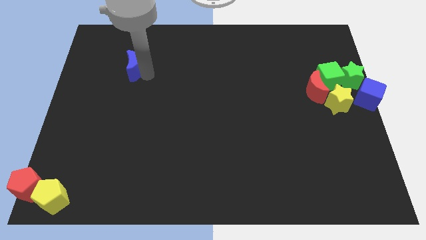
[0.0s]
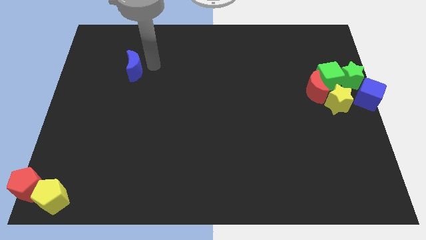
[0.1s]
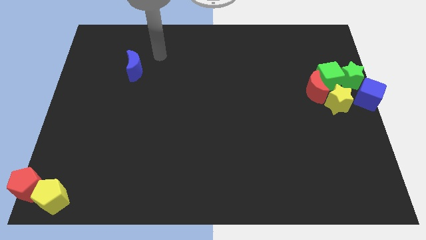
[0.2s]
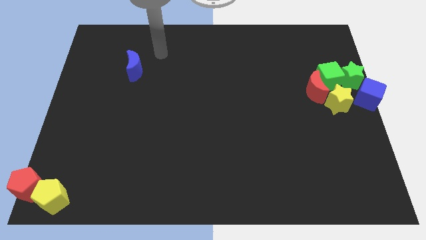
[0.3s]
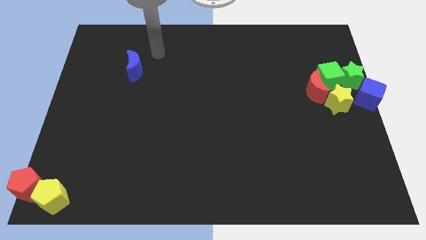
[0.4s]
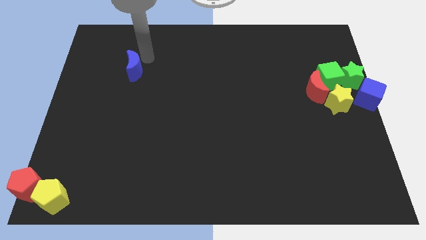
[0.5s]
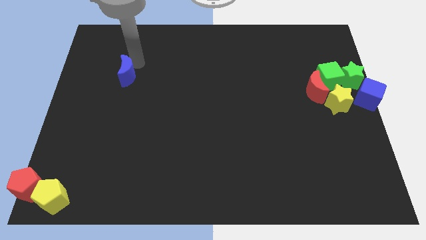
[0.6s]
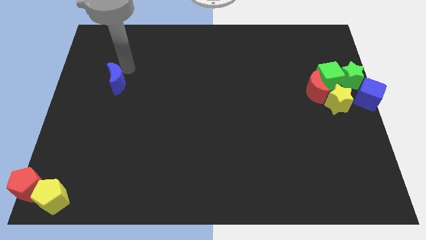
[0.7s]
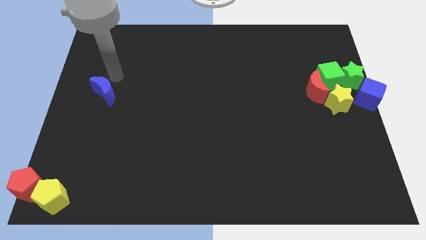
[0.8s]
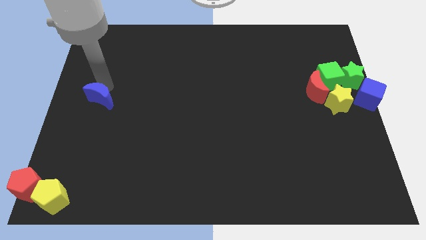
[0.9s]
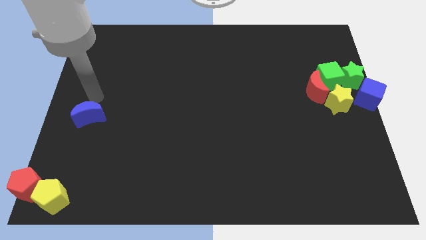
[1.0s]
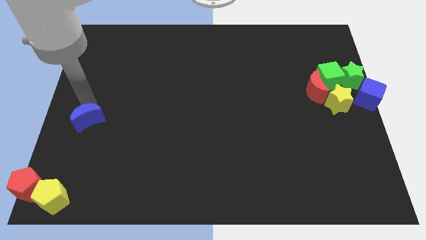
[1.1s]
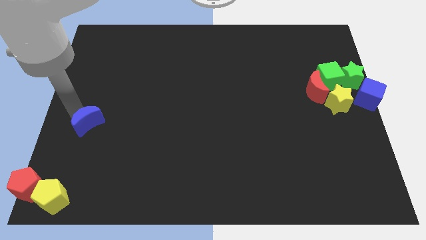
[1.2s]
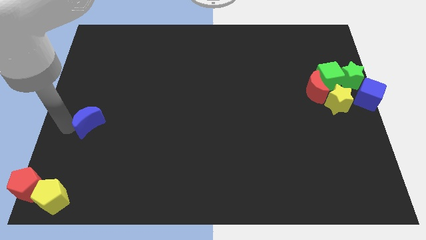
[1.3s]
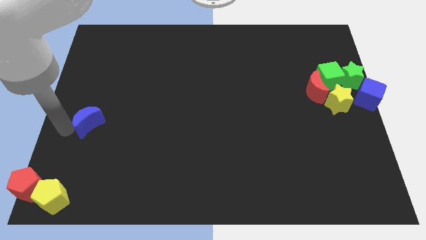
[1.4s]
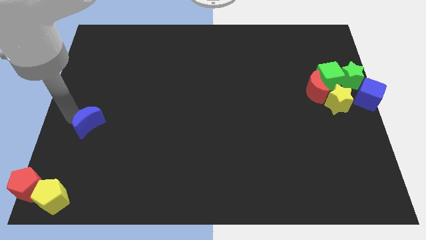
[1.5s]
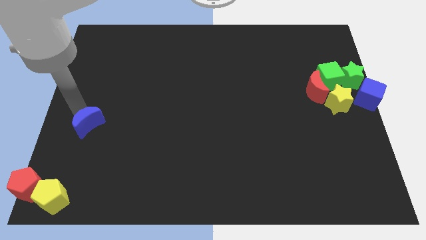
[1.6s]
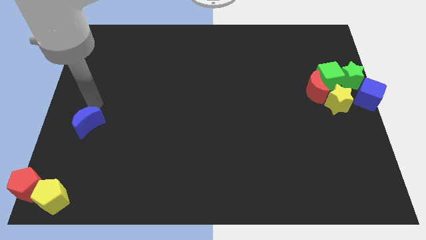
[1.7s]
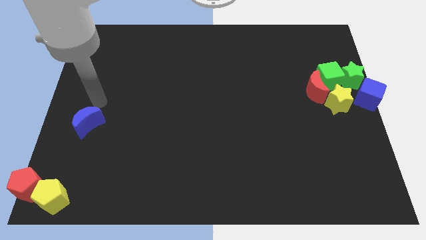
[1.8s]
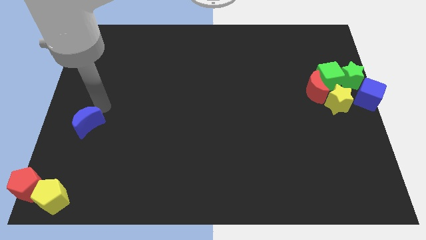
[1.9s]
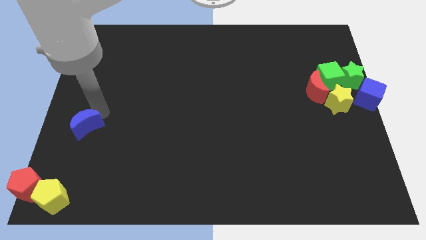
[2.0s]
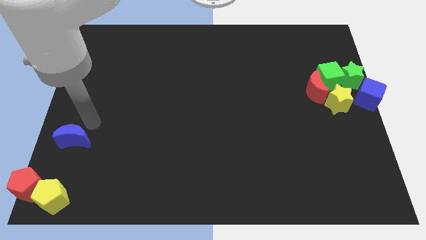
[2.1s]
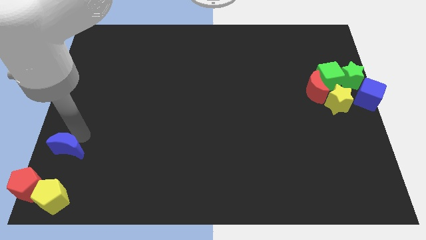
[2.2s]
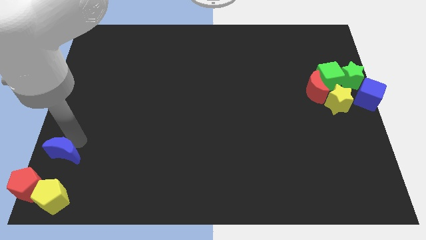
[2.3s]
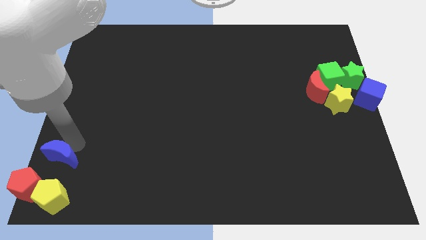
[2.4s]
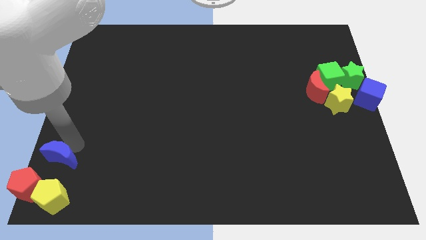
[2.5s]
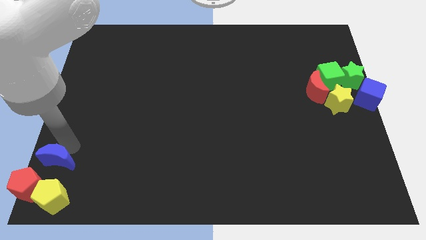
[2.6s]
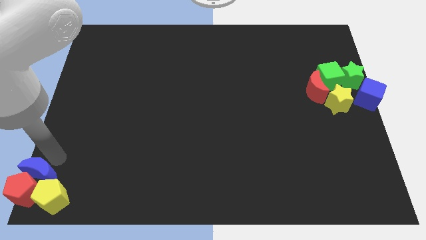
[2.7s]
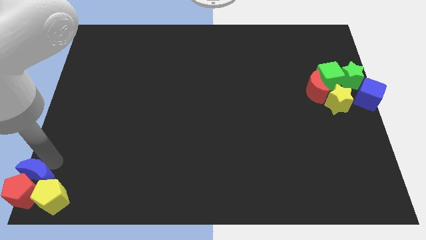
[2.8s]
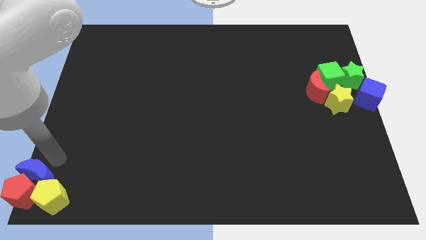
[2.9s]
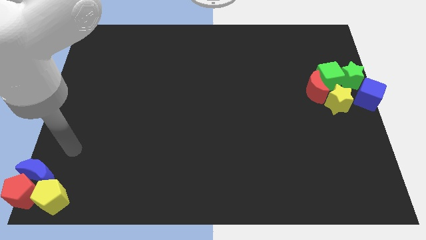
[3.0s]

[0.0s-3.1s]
push the blue crescent into the red pentagon

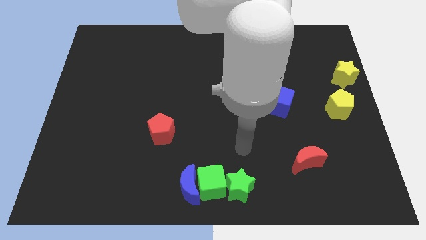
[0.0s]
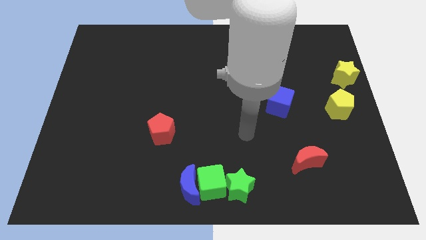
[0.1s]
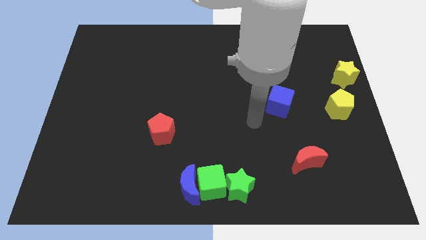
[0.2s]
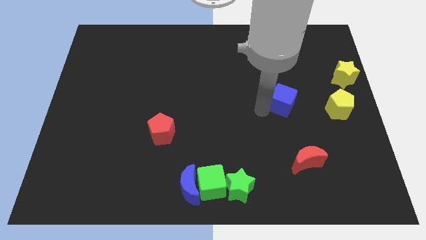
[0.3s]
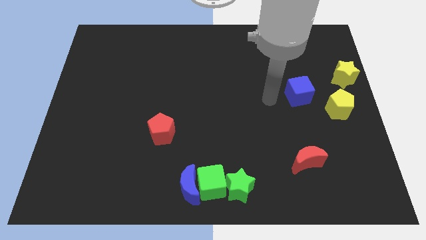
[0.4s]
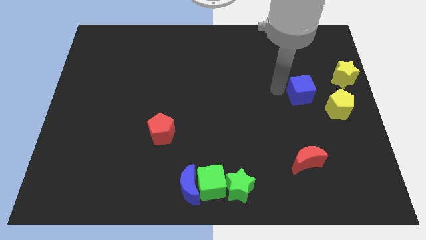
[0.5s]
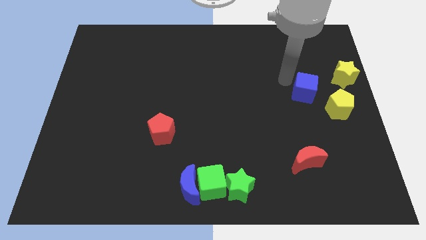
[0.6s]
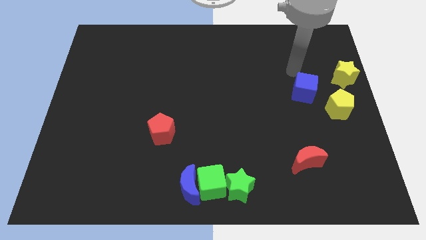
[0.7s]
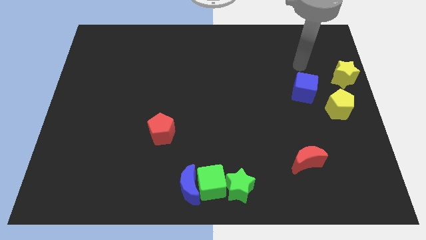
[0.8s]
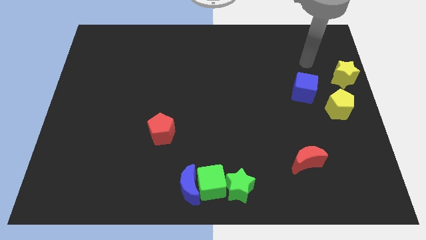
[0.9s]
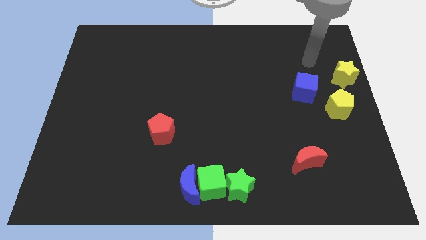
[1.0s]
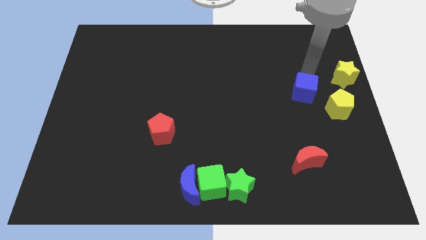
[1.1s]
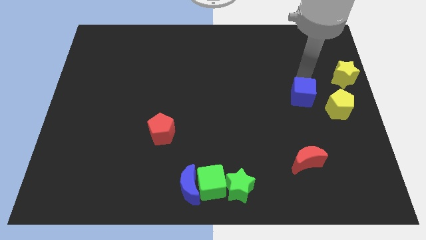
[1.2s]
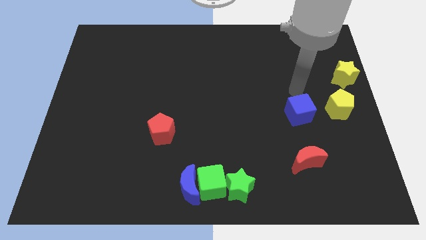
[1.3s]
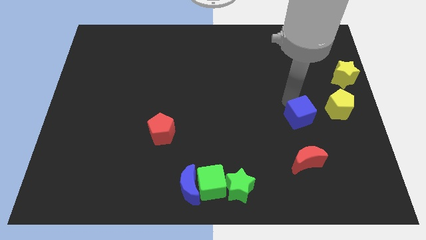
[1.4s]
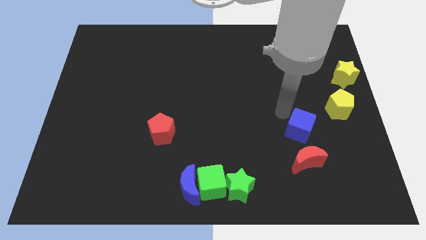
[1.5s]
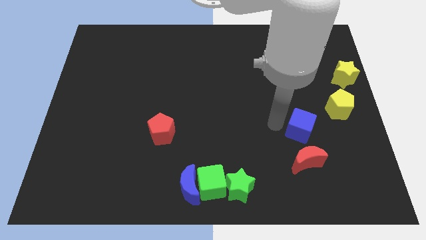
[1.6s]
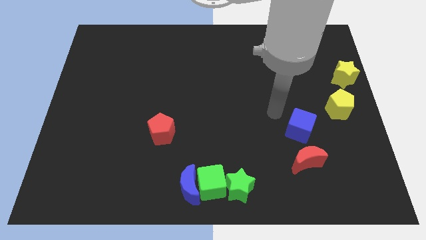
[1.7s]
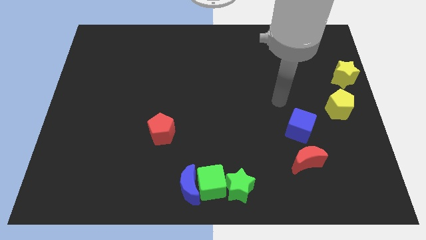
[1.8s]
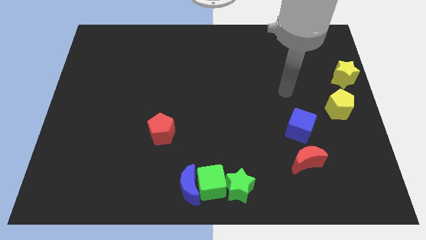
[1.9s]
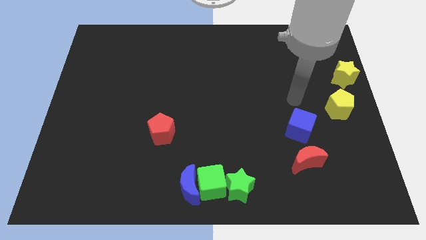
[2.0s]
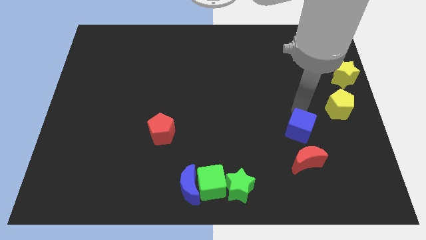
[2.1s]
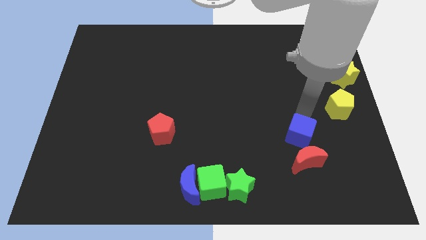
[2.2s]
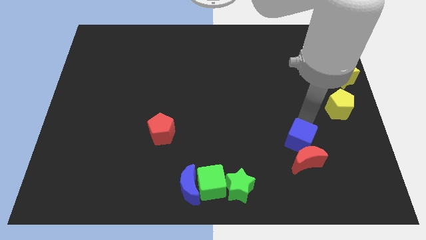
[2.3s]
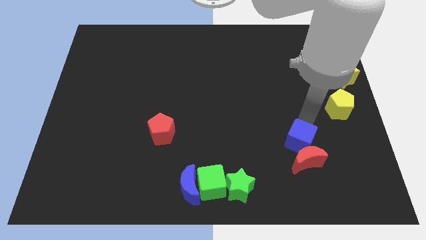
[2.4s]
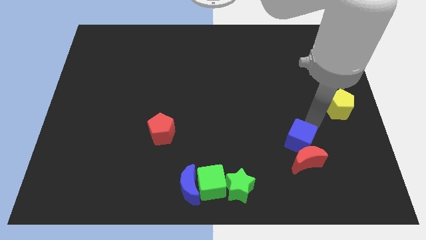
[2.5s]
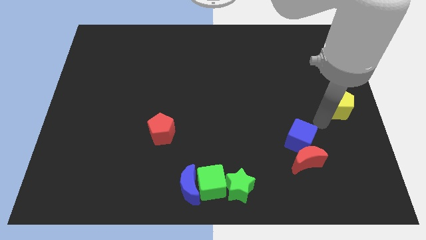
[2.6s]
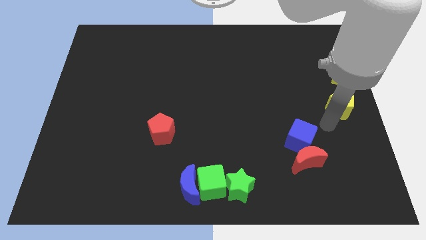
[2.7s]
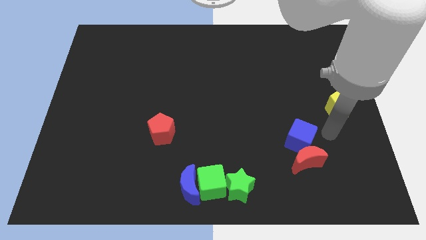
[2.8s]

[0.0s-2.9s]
push the blue cube to the top side of the red crescent

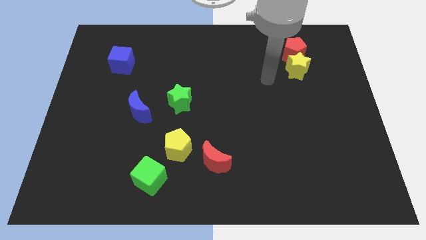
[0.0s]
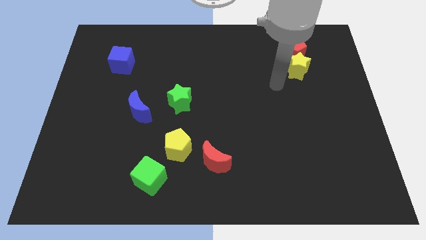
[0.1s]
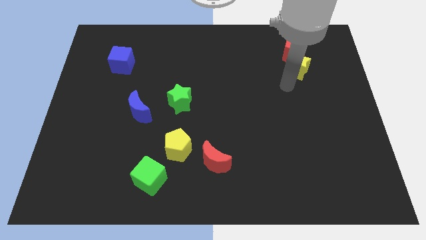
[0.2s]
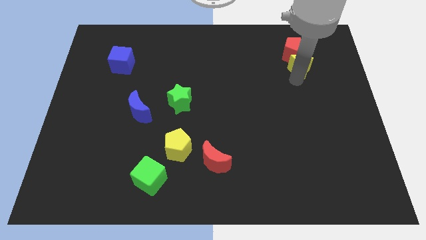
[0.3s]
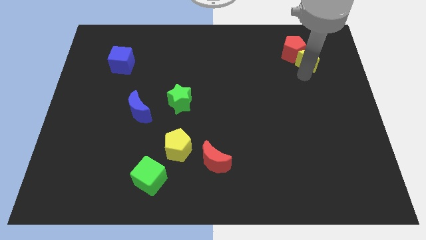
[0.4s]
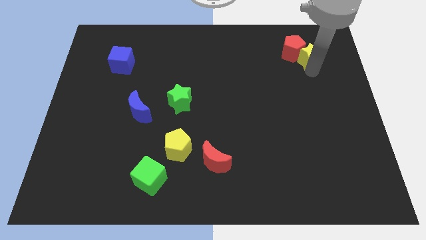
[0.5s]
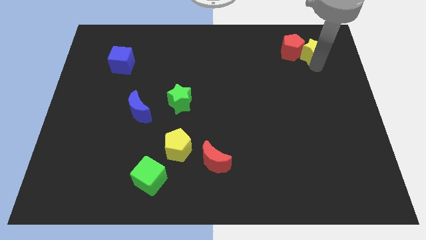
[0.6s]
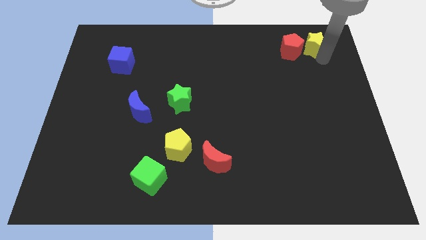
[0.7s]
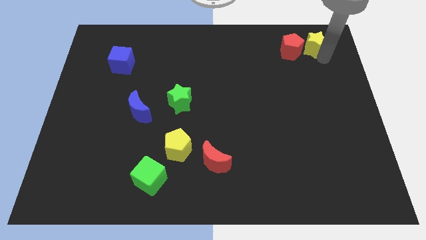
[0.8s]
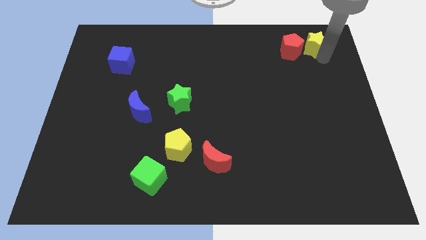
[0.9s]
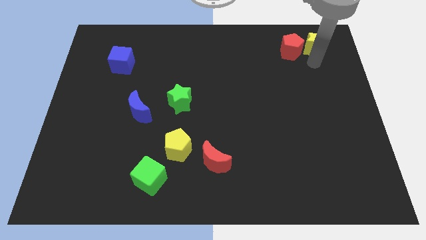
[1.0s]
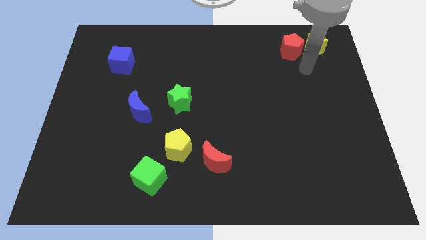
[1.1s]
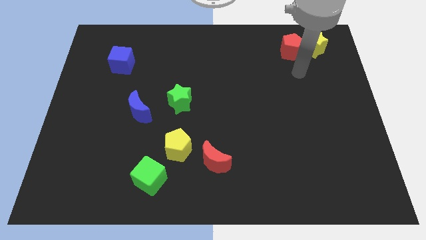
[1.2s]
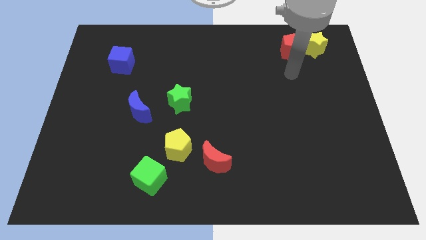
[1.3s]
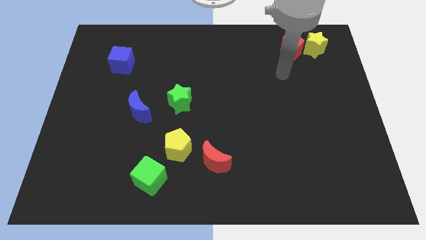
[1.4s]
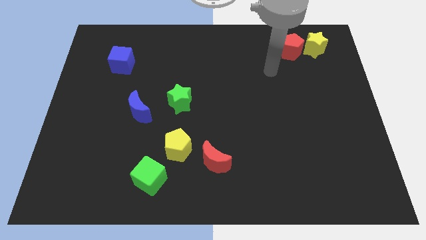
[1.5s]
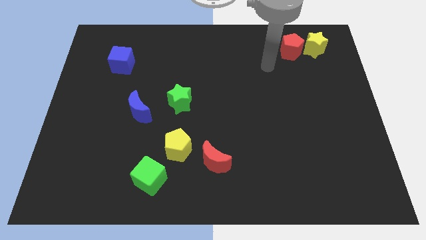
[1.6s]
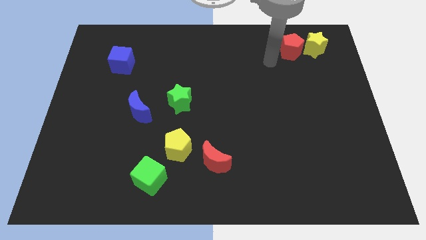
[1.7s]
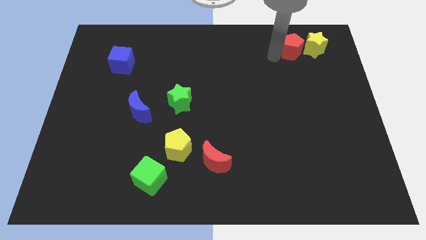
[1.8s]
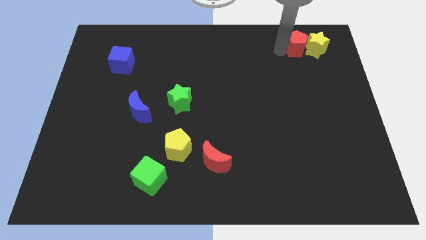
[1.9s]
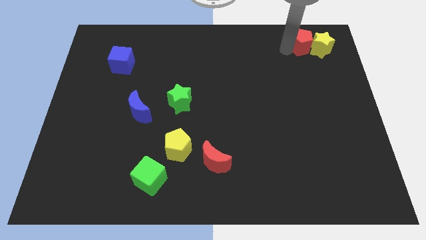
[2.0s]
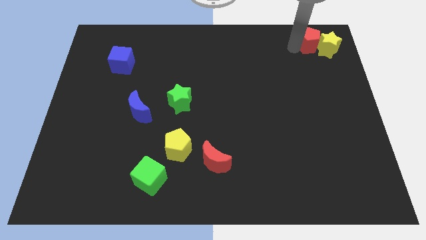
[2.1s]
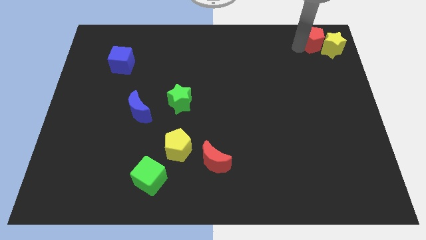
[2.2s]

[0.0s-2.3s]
move the both yellow star and and red pentagon to the top right corner of the board

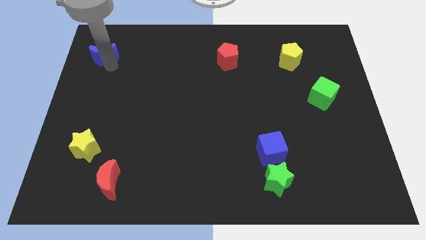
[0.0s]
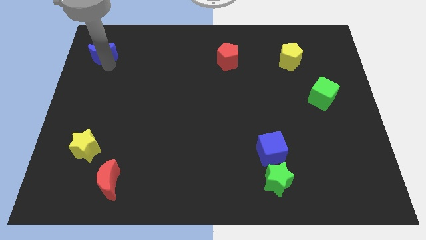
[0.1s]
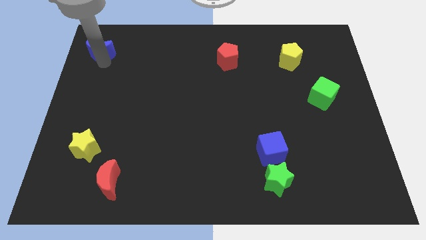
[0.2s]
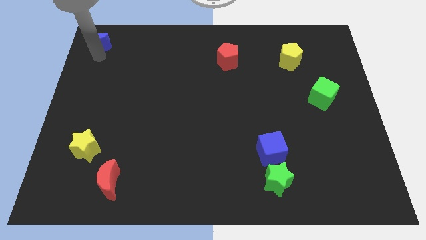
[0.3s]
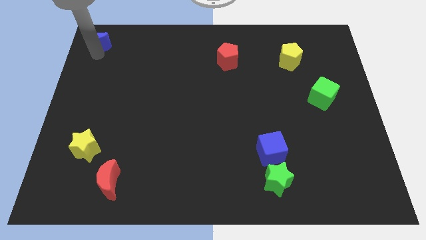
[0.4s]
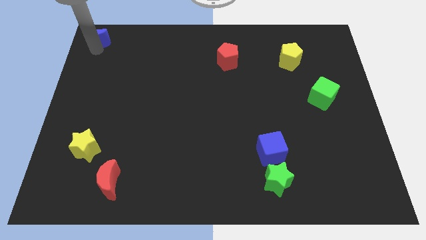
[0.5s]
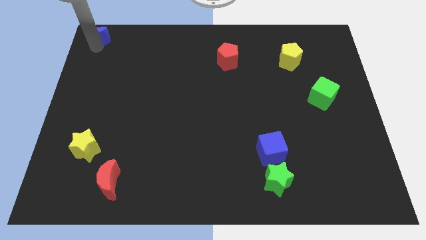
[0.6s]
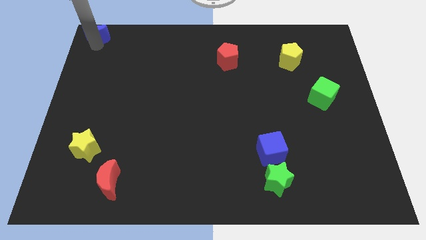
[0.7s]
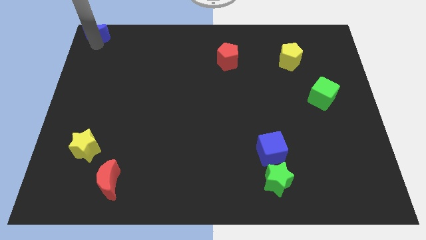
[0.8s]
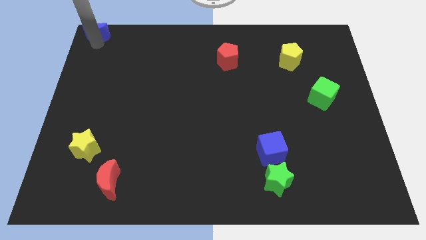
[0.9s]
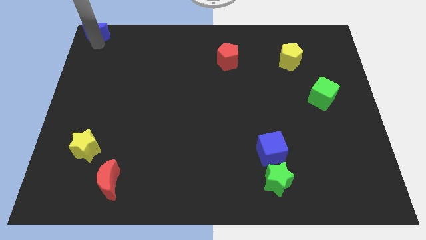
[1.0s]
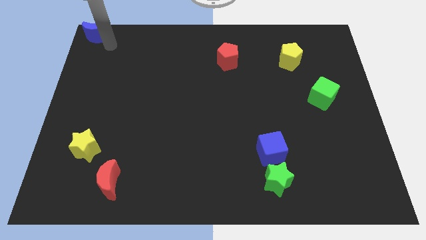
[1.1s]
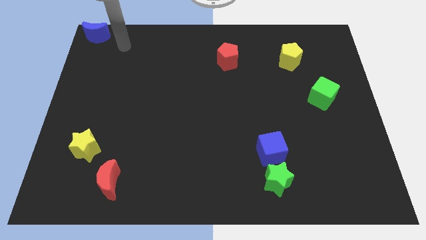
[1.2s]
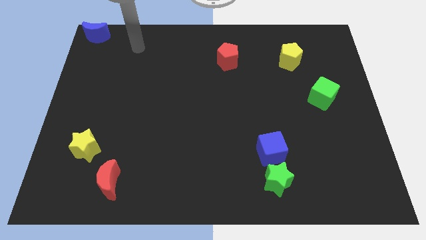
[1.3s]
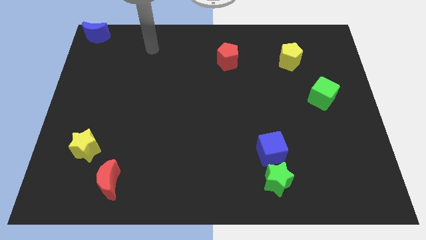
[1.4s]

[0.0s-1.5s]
push the blue moon to the top left
